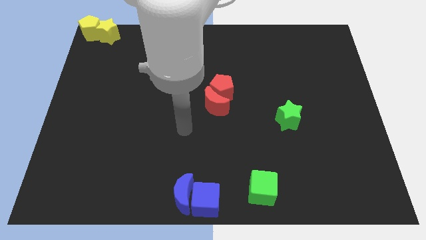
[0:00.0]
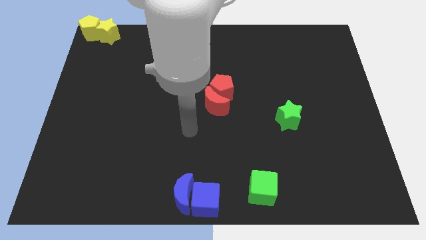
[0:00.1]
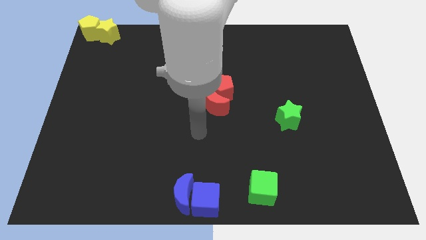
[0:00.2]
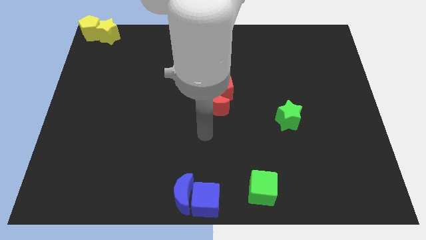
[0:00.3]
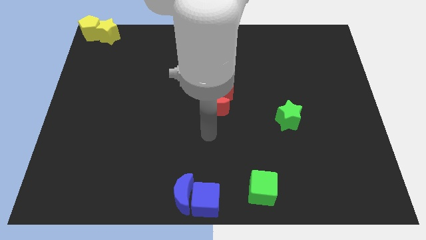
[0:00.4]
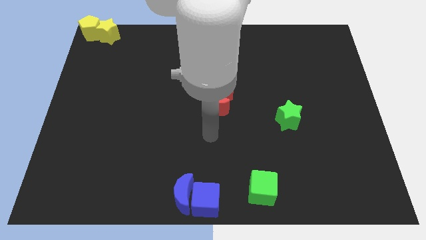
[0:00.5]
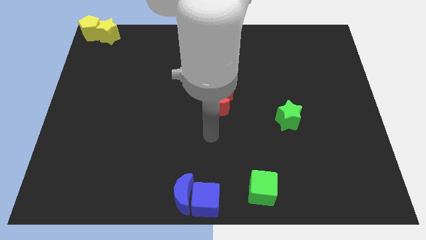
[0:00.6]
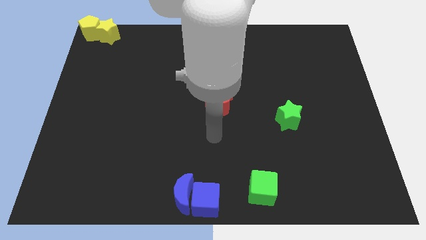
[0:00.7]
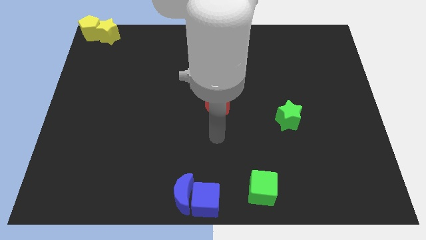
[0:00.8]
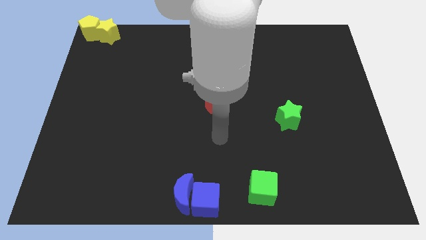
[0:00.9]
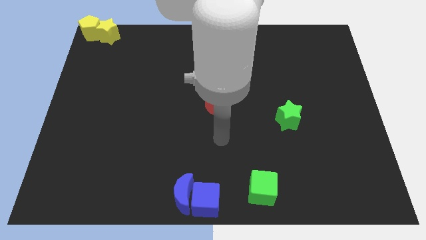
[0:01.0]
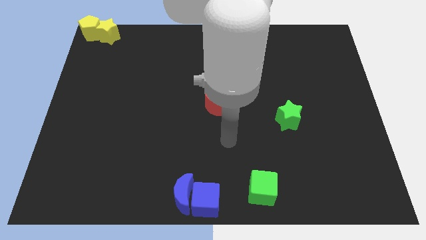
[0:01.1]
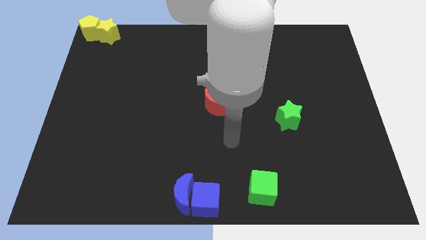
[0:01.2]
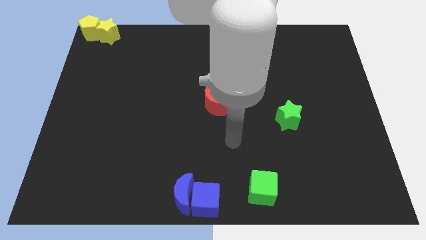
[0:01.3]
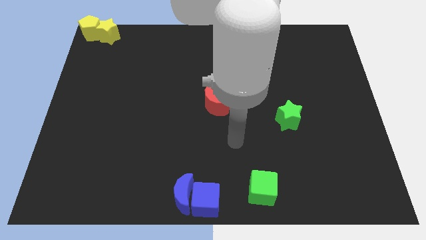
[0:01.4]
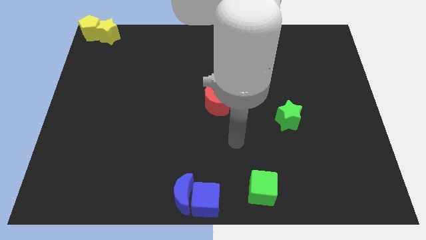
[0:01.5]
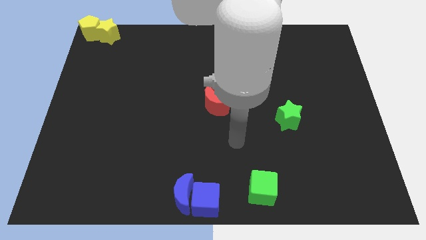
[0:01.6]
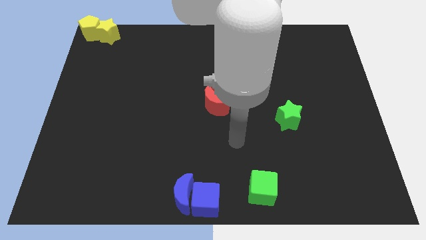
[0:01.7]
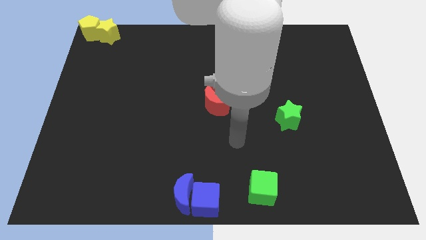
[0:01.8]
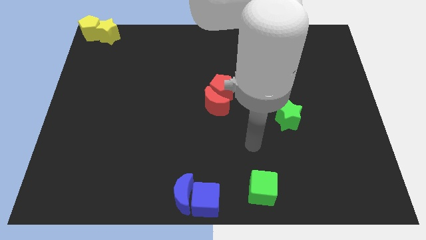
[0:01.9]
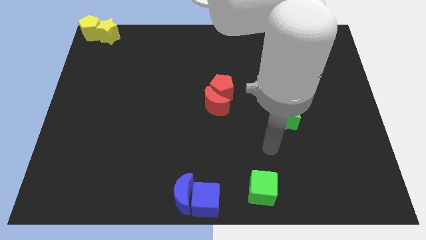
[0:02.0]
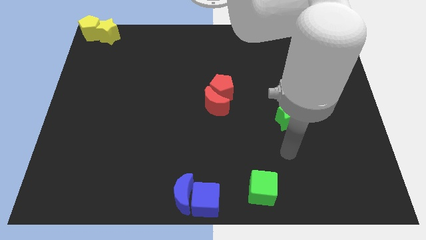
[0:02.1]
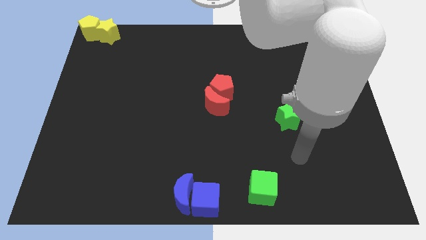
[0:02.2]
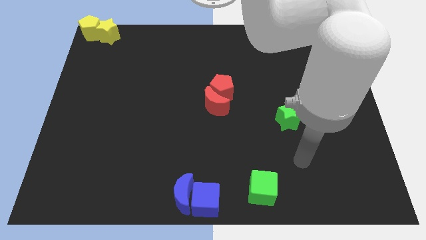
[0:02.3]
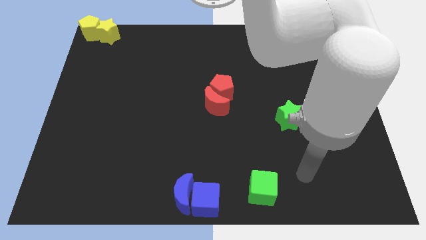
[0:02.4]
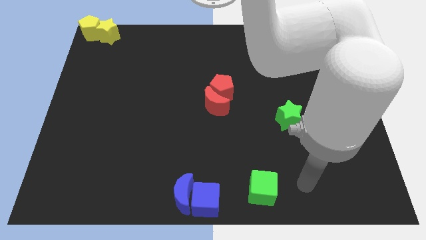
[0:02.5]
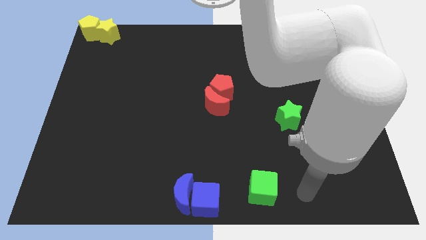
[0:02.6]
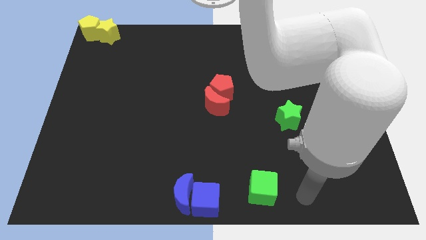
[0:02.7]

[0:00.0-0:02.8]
move your arm to the right of the green cube

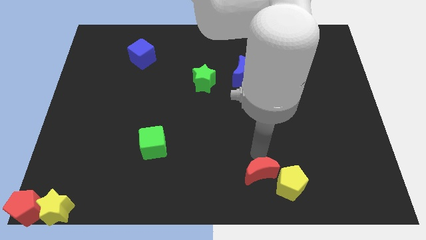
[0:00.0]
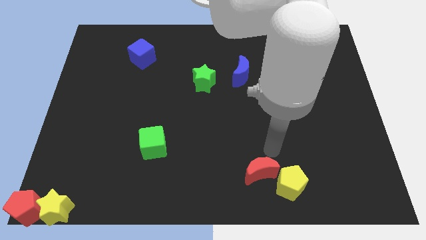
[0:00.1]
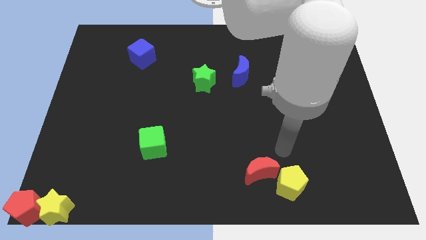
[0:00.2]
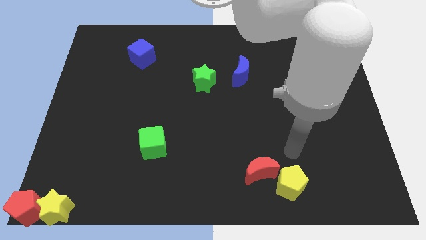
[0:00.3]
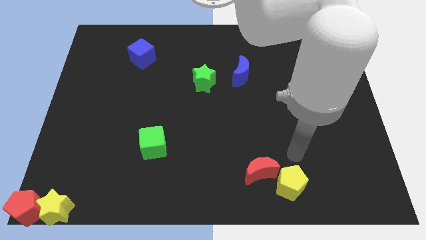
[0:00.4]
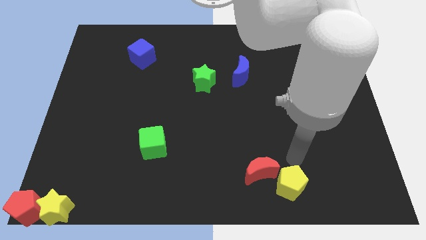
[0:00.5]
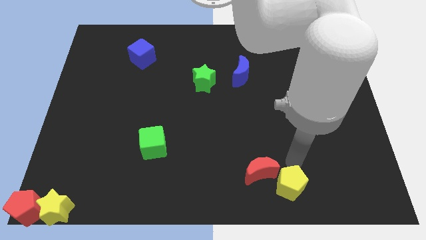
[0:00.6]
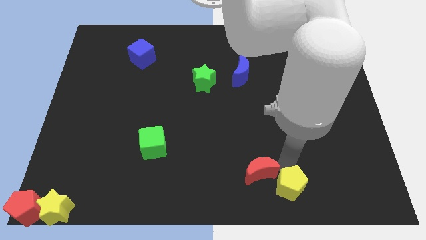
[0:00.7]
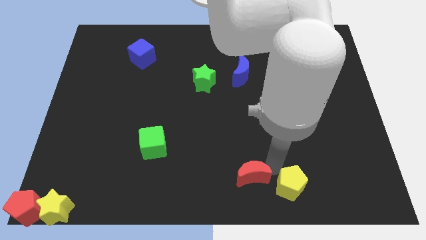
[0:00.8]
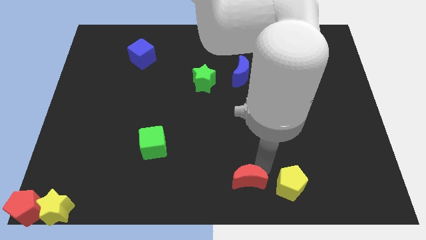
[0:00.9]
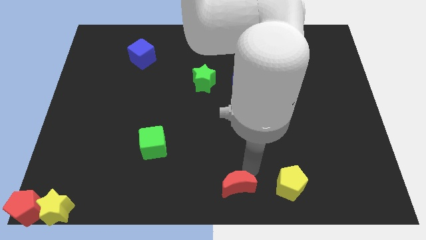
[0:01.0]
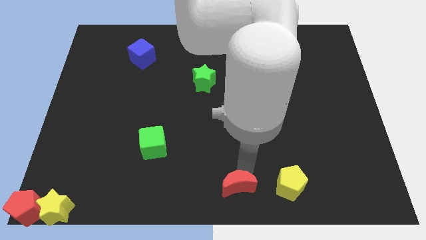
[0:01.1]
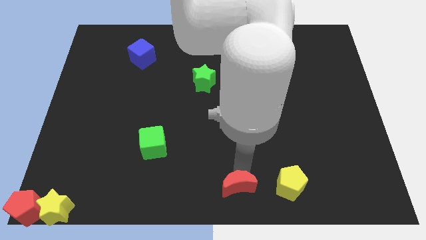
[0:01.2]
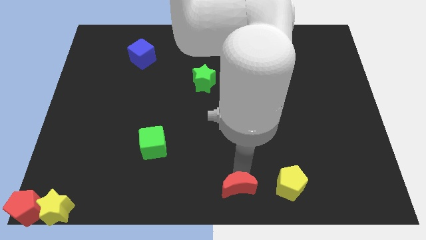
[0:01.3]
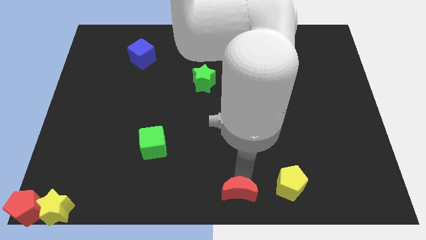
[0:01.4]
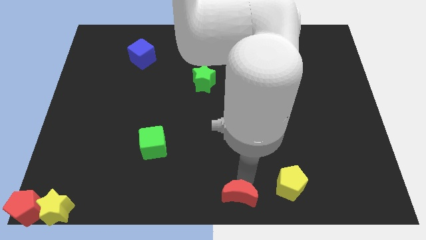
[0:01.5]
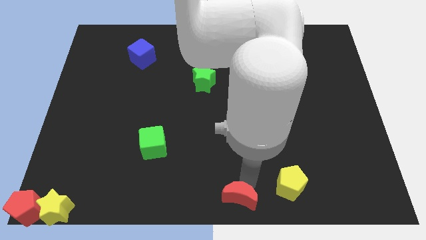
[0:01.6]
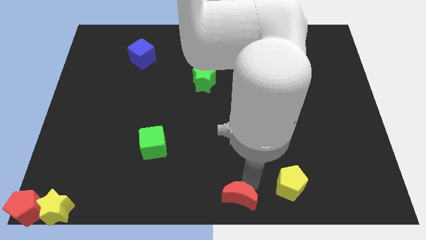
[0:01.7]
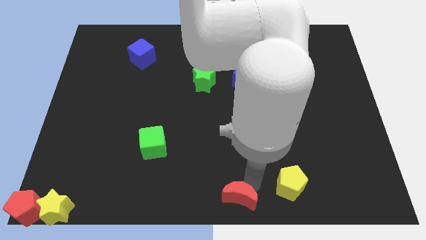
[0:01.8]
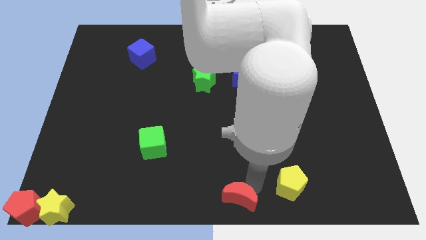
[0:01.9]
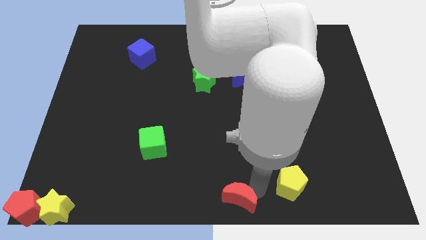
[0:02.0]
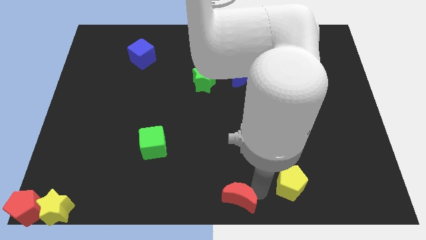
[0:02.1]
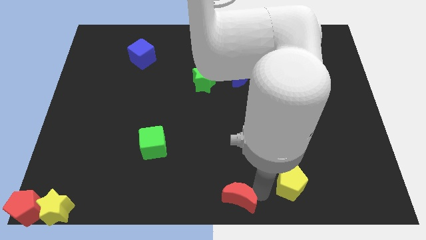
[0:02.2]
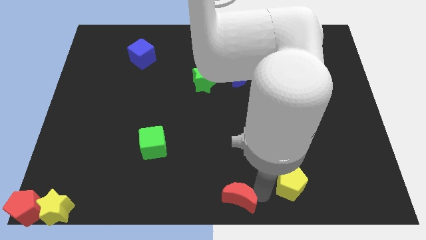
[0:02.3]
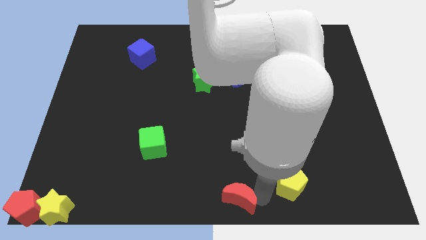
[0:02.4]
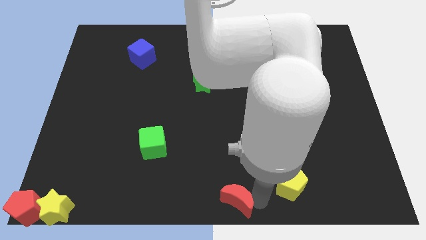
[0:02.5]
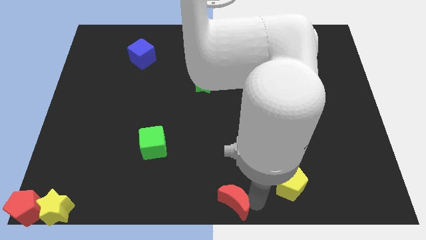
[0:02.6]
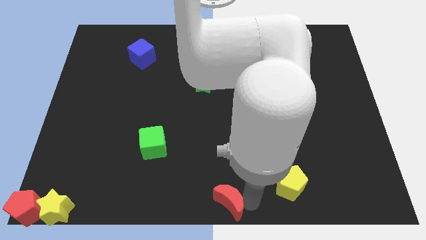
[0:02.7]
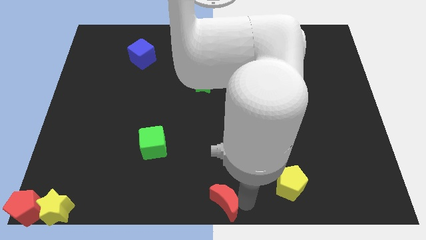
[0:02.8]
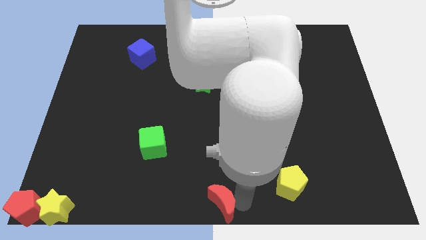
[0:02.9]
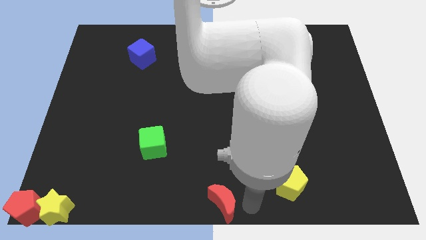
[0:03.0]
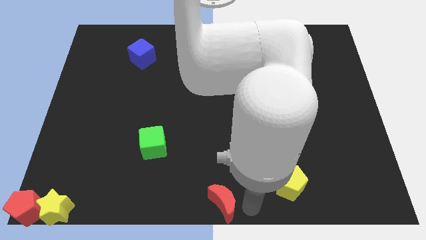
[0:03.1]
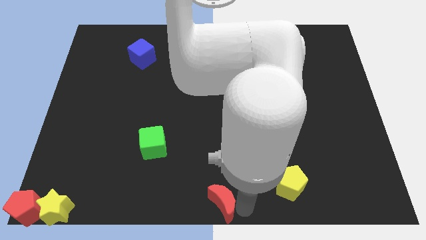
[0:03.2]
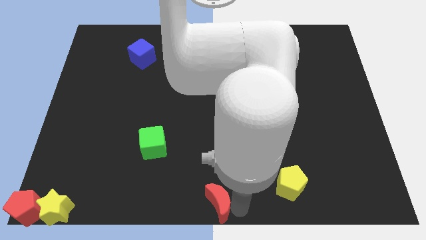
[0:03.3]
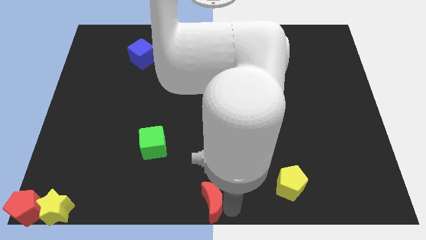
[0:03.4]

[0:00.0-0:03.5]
move the red crescent to the bottom center of the board

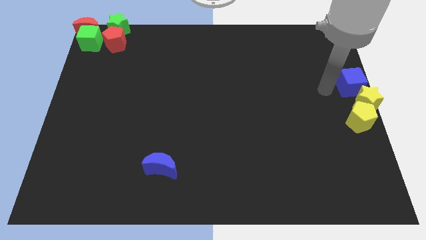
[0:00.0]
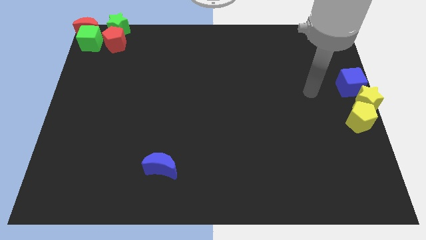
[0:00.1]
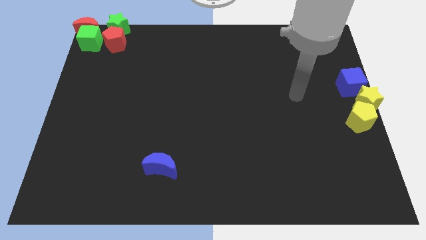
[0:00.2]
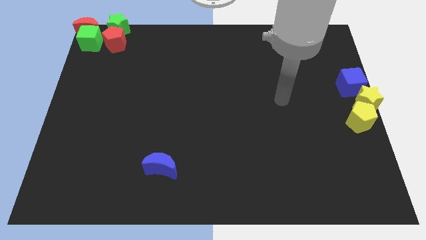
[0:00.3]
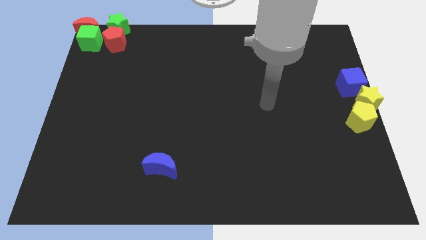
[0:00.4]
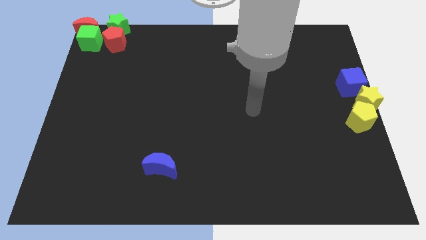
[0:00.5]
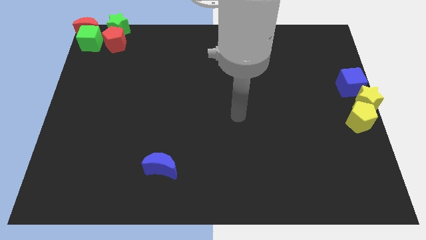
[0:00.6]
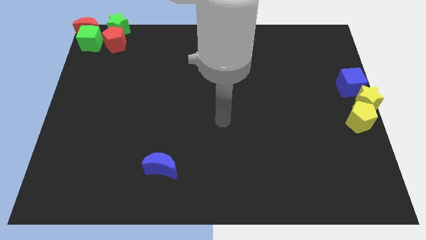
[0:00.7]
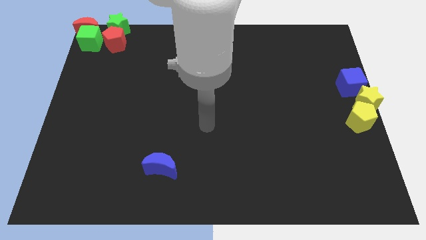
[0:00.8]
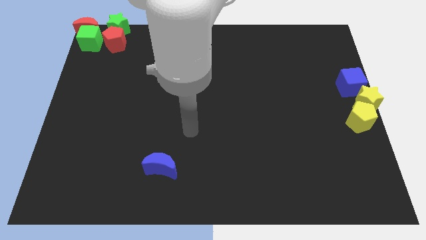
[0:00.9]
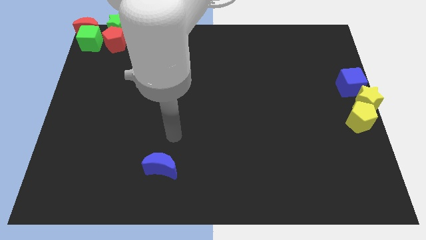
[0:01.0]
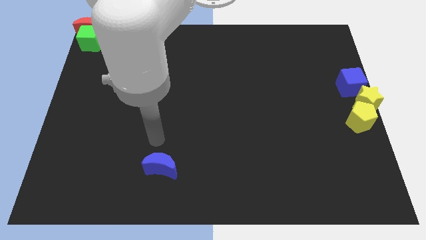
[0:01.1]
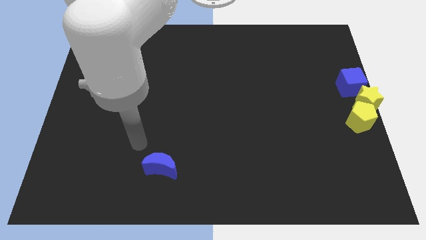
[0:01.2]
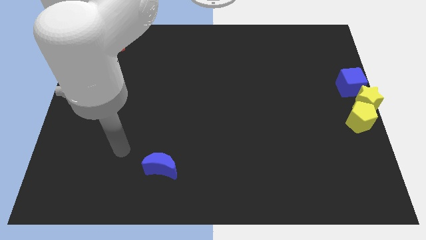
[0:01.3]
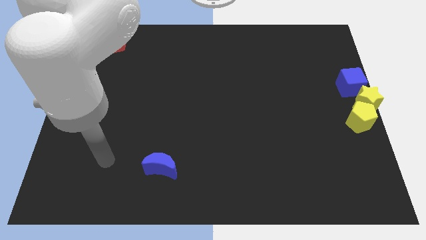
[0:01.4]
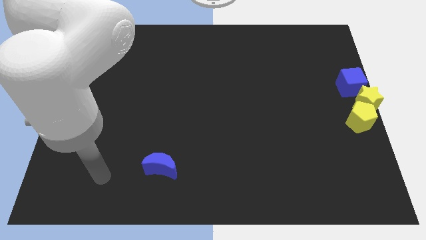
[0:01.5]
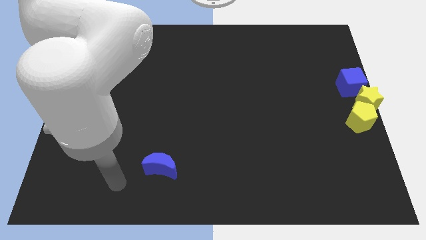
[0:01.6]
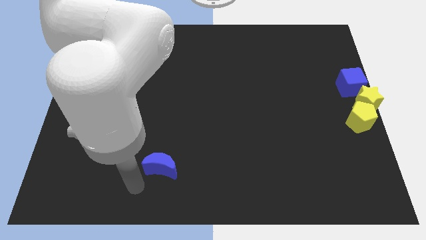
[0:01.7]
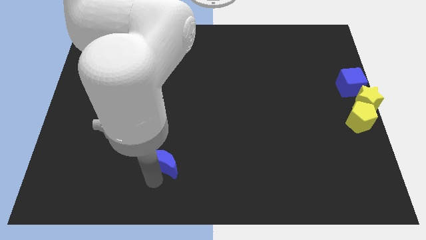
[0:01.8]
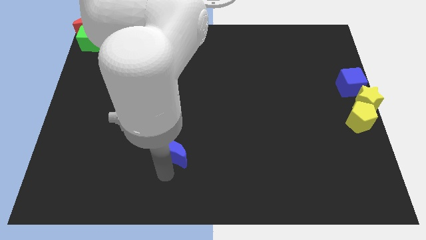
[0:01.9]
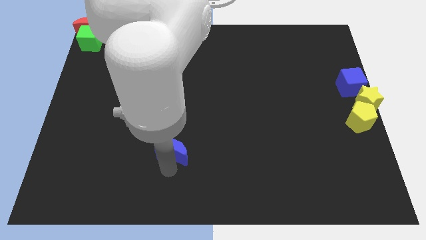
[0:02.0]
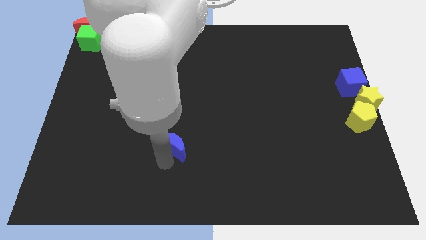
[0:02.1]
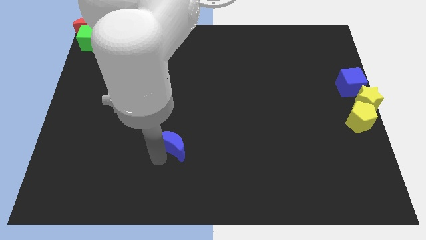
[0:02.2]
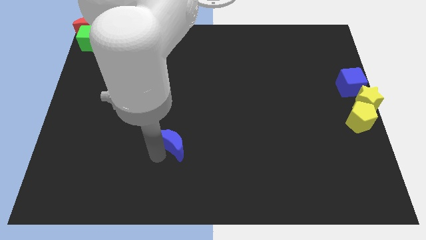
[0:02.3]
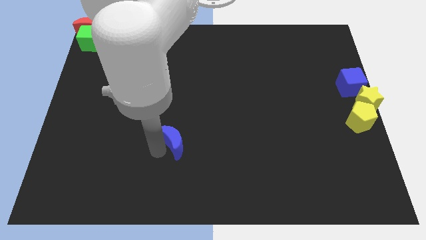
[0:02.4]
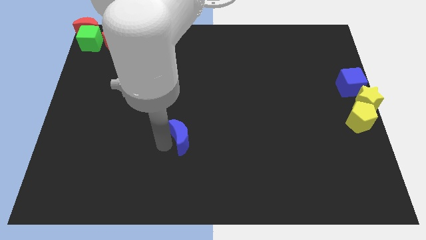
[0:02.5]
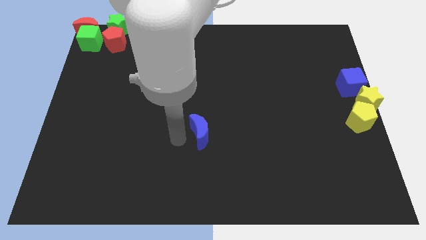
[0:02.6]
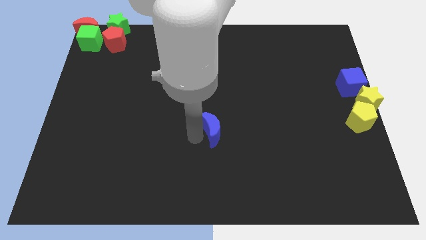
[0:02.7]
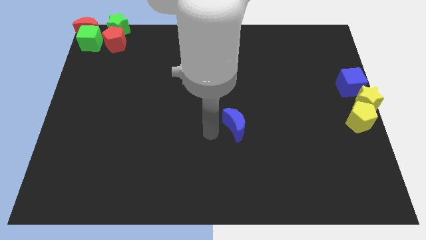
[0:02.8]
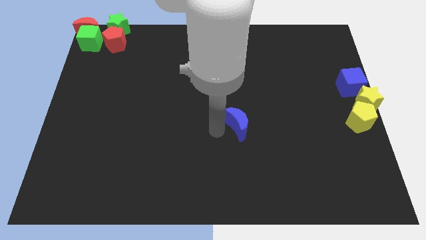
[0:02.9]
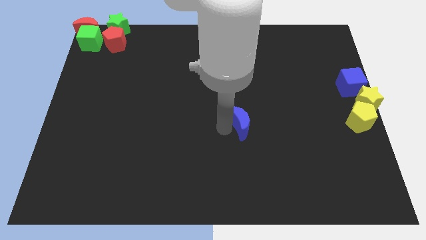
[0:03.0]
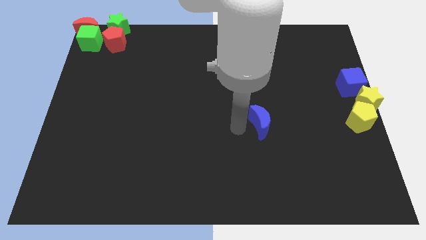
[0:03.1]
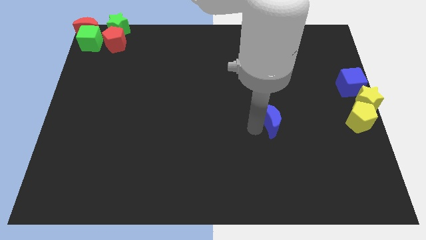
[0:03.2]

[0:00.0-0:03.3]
slide the blue crescent towards the yellow blocks
